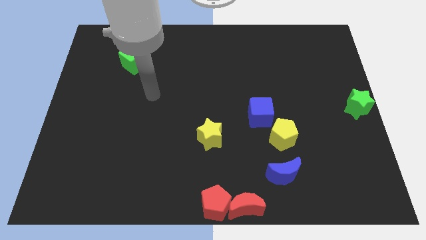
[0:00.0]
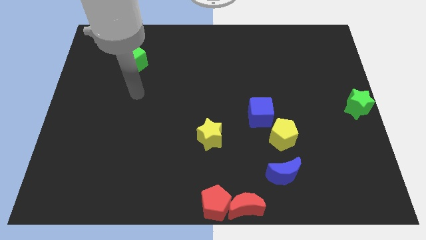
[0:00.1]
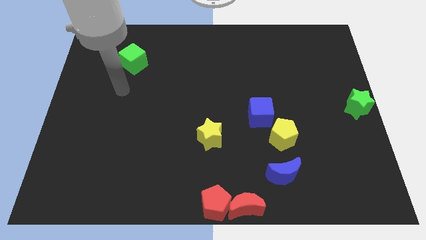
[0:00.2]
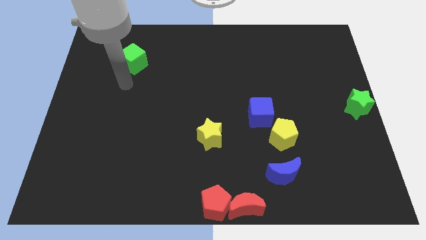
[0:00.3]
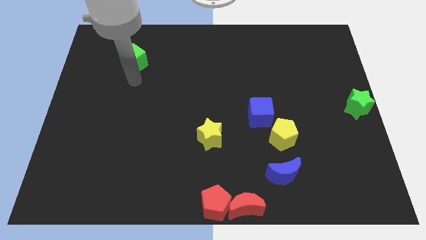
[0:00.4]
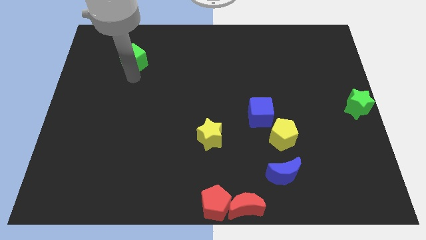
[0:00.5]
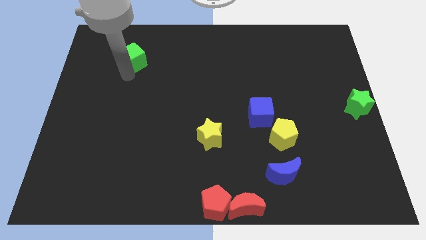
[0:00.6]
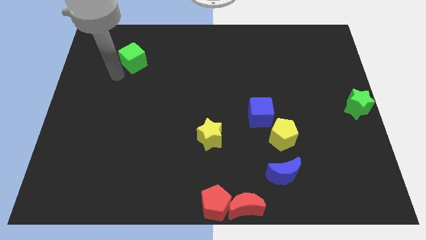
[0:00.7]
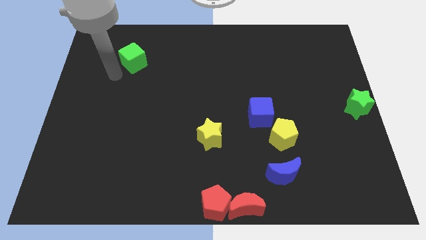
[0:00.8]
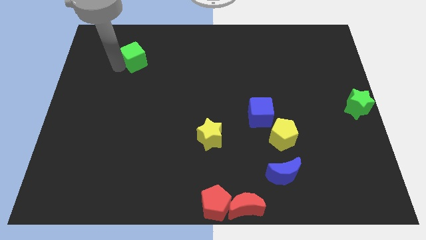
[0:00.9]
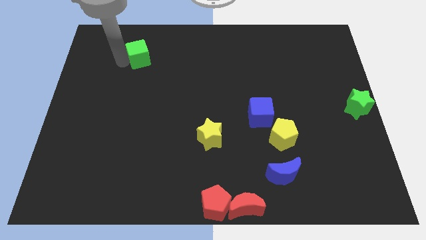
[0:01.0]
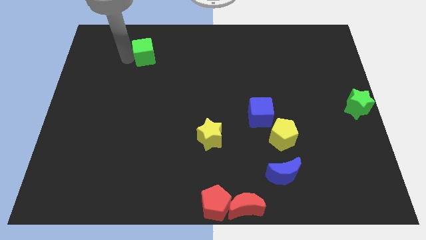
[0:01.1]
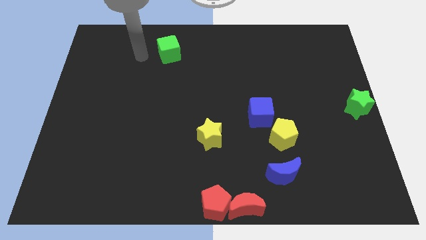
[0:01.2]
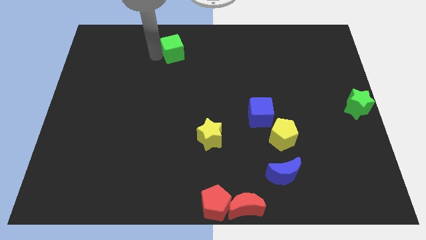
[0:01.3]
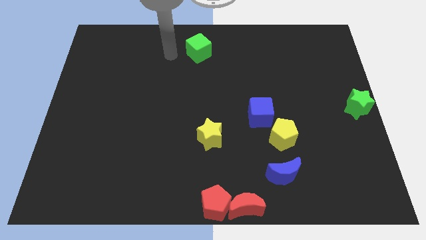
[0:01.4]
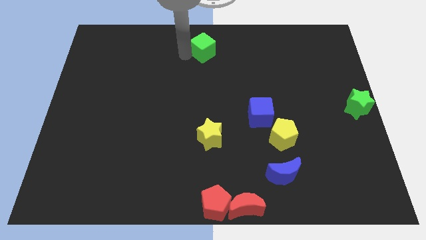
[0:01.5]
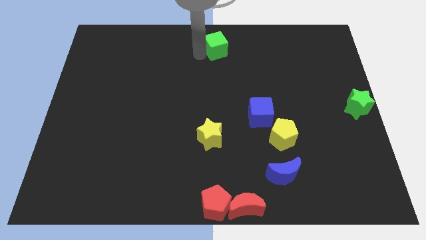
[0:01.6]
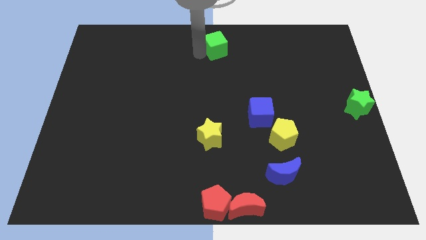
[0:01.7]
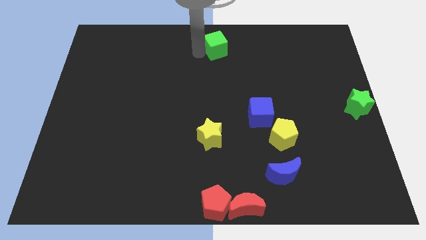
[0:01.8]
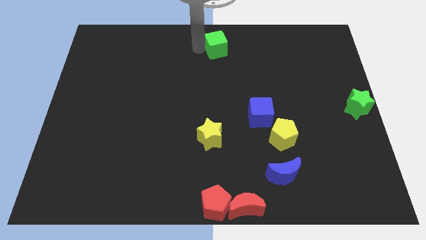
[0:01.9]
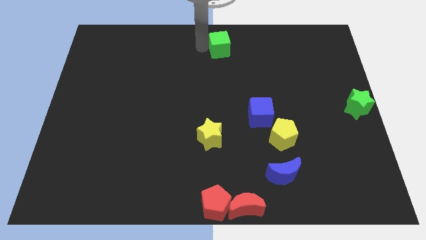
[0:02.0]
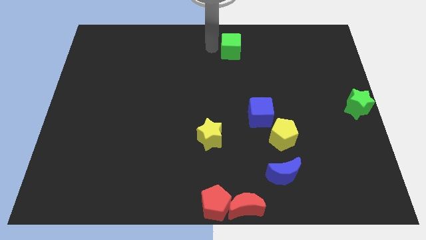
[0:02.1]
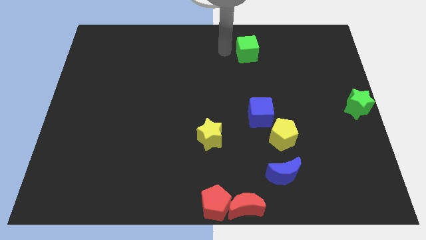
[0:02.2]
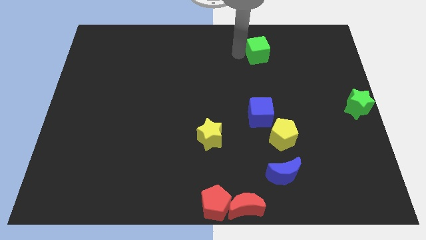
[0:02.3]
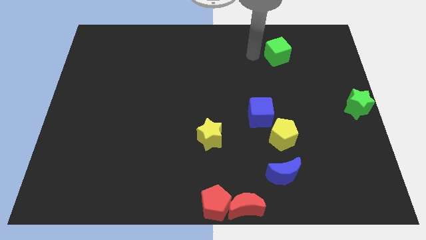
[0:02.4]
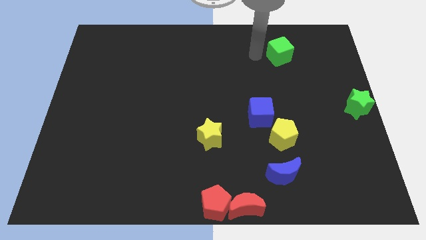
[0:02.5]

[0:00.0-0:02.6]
push the green cube towards the right side of the board

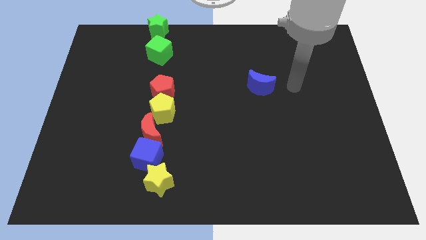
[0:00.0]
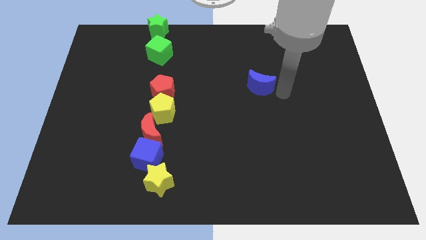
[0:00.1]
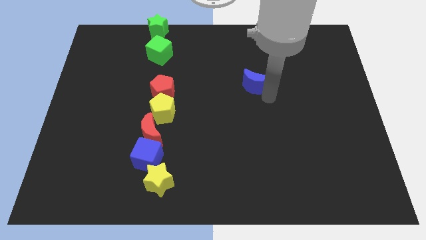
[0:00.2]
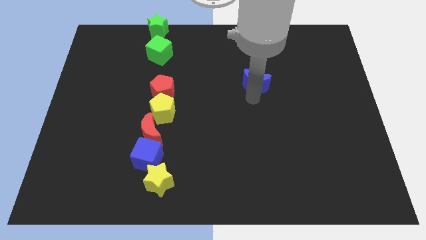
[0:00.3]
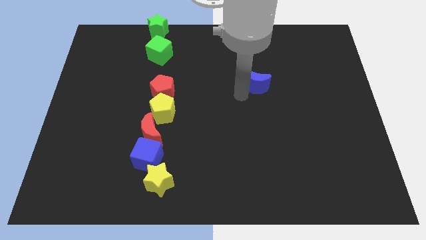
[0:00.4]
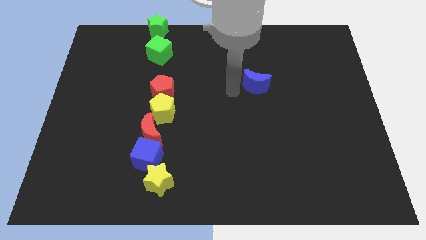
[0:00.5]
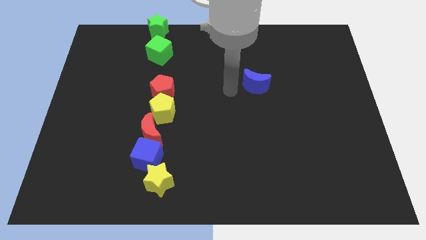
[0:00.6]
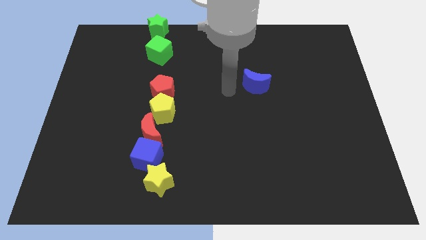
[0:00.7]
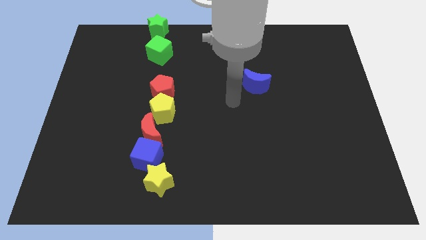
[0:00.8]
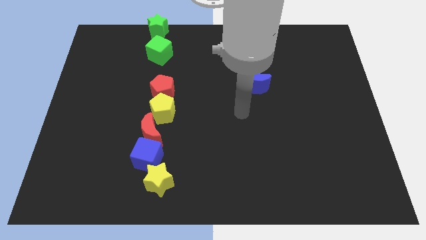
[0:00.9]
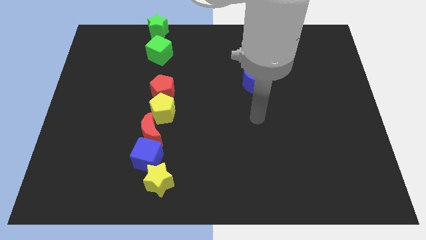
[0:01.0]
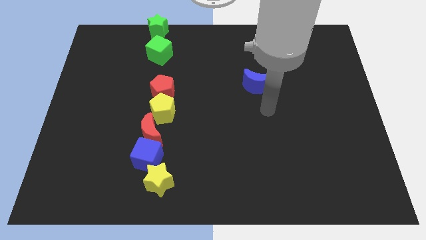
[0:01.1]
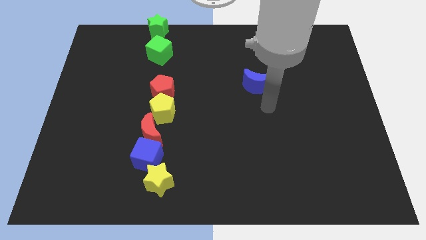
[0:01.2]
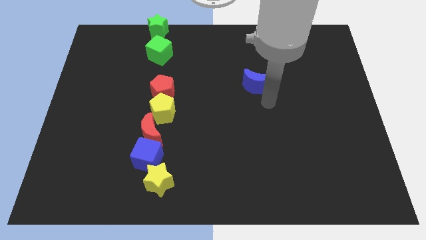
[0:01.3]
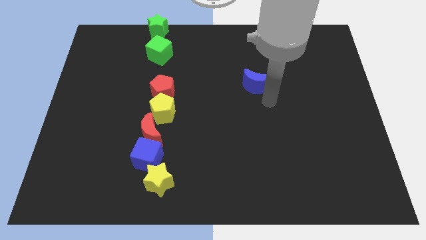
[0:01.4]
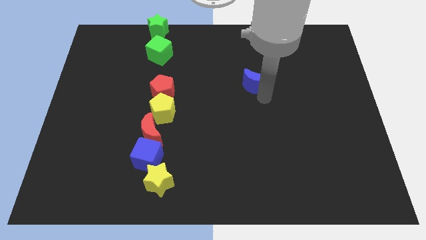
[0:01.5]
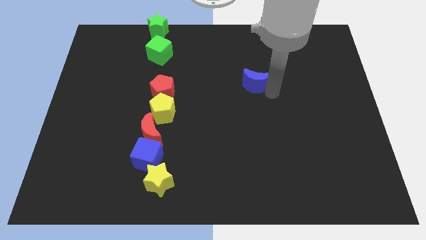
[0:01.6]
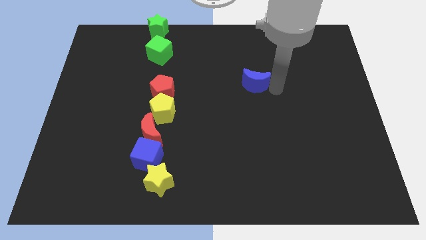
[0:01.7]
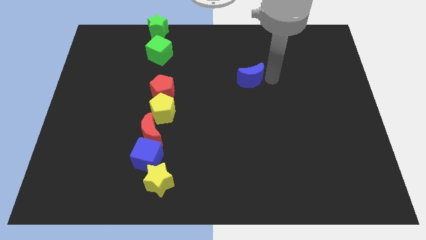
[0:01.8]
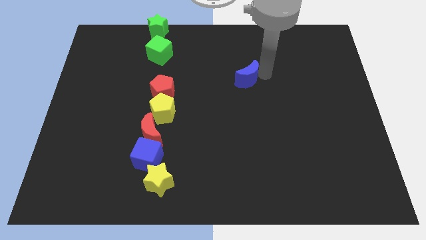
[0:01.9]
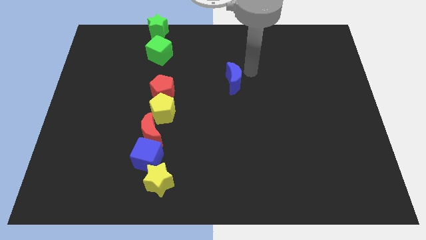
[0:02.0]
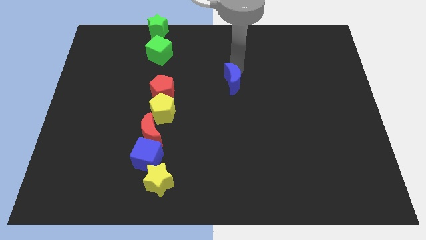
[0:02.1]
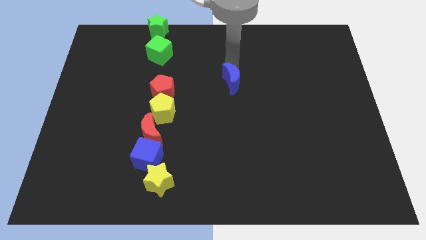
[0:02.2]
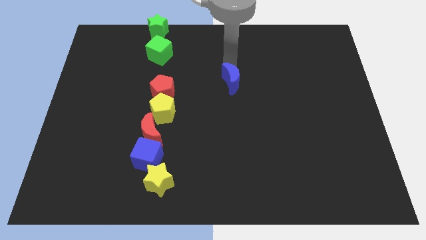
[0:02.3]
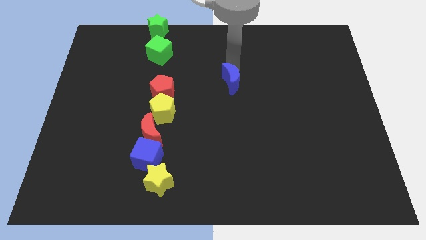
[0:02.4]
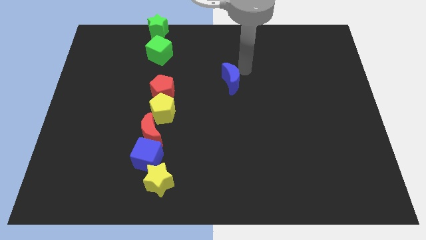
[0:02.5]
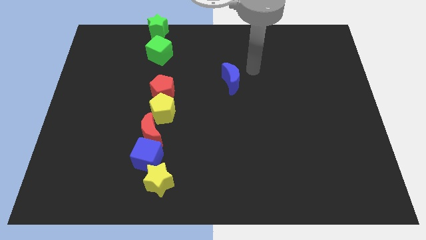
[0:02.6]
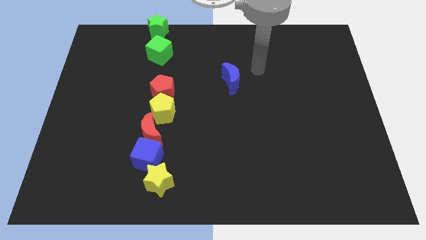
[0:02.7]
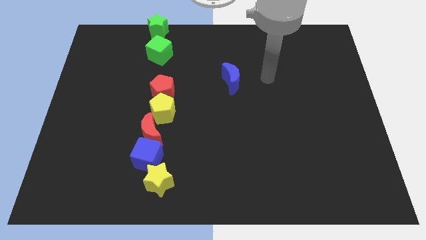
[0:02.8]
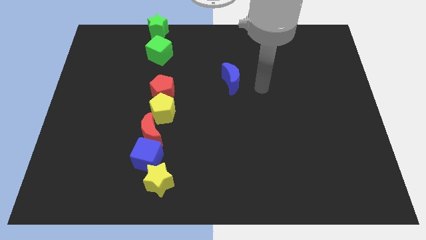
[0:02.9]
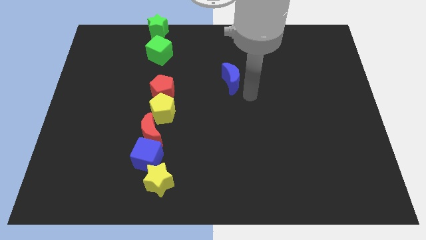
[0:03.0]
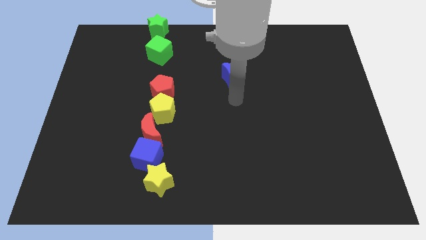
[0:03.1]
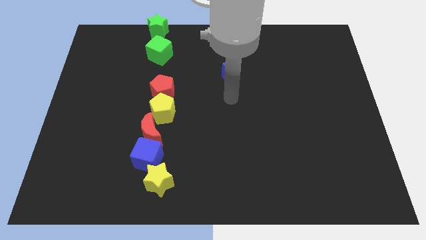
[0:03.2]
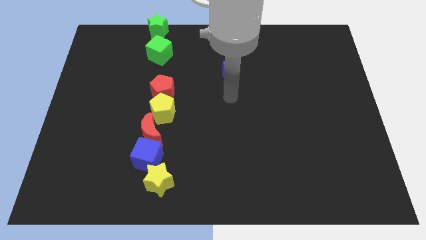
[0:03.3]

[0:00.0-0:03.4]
place your arm below blue moon

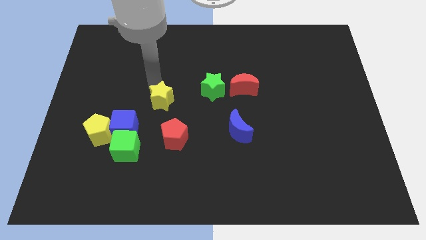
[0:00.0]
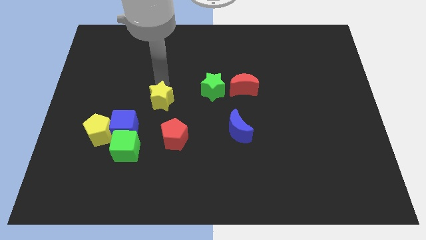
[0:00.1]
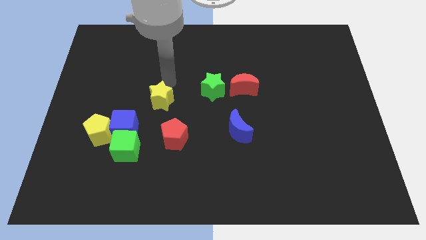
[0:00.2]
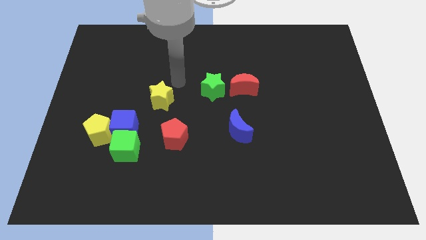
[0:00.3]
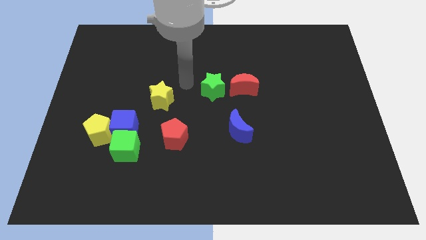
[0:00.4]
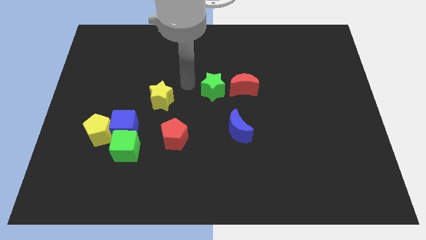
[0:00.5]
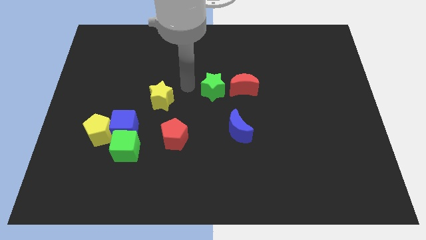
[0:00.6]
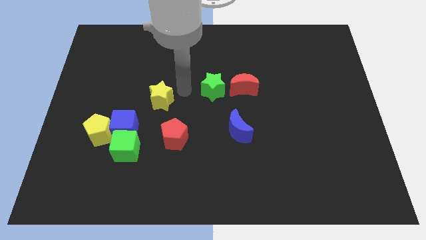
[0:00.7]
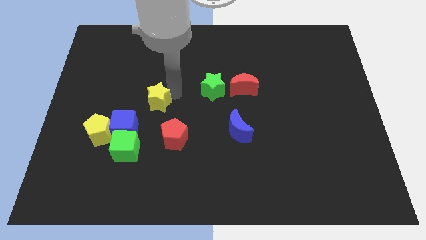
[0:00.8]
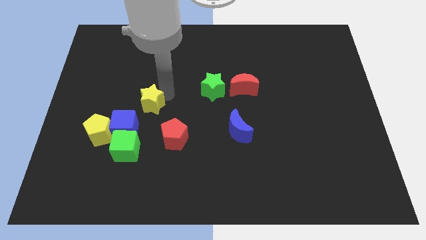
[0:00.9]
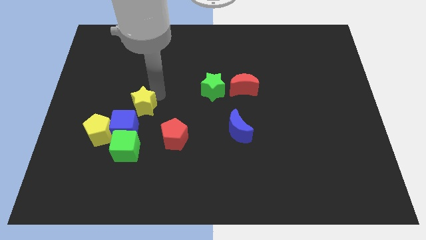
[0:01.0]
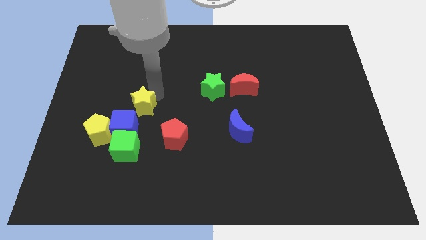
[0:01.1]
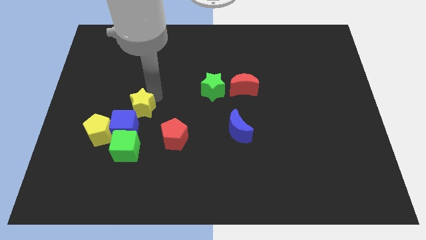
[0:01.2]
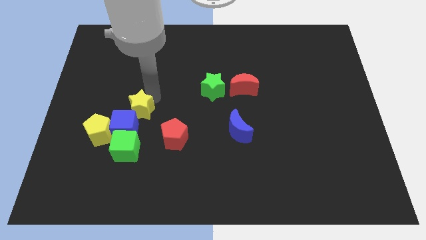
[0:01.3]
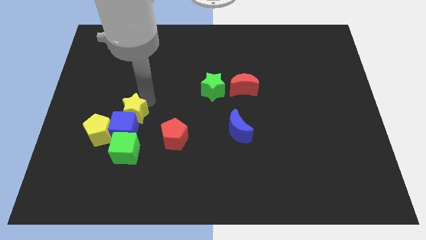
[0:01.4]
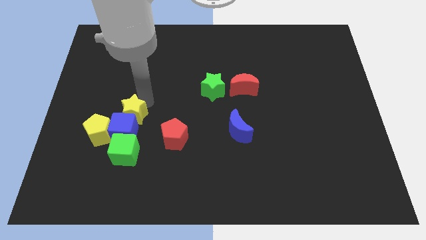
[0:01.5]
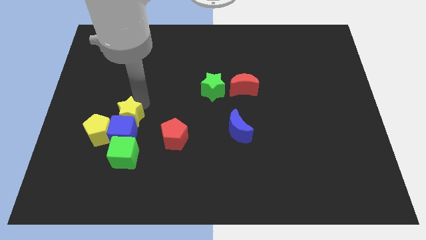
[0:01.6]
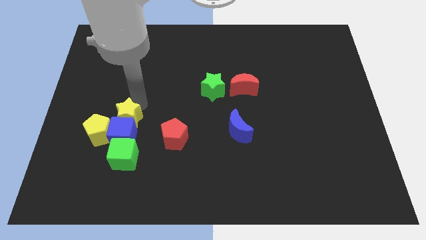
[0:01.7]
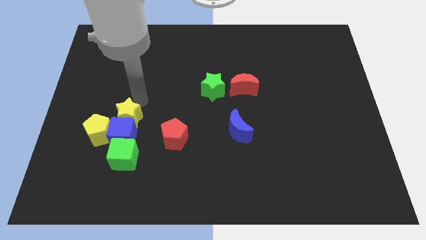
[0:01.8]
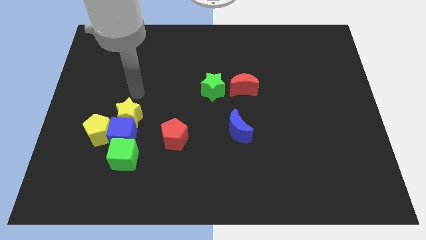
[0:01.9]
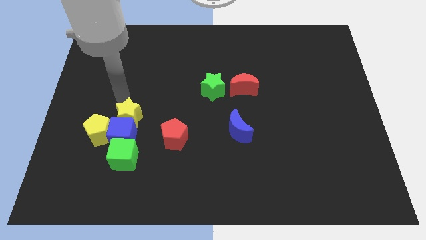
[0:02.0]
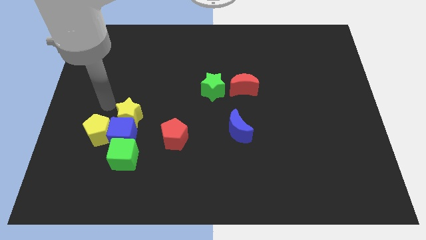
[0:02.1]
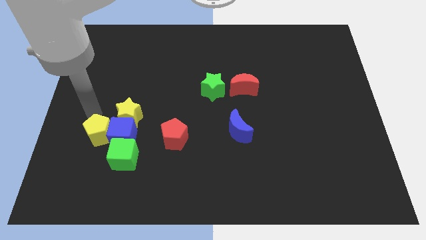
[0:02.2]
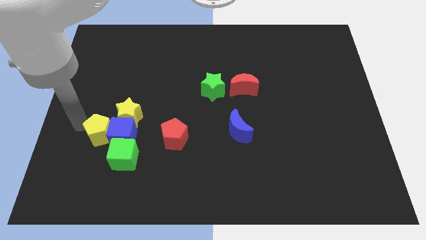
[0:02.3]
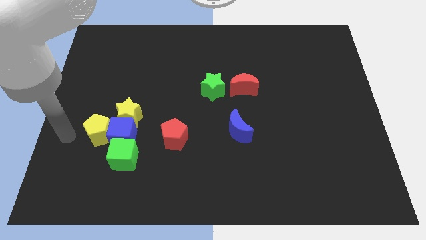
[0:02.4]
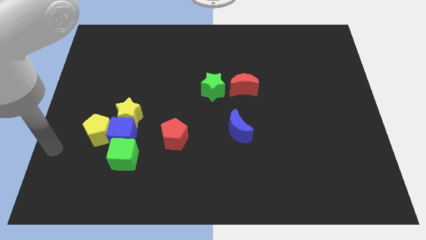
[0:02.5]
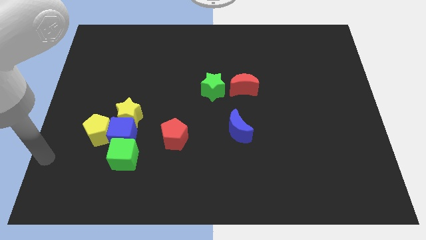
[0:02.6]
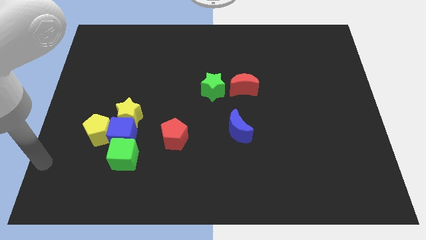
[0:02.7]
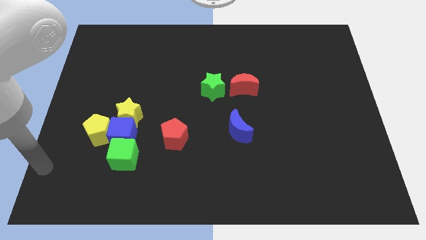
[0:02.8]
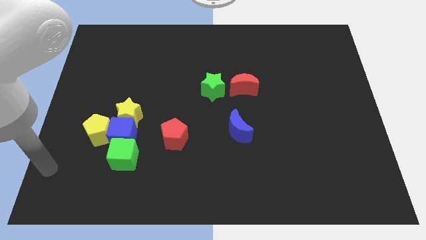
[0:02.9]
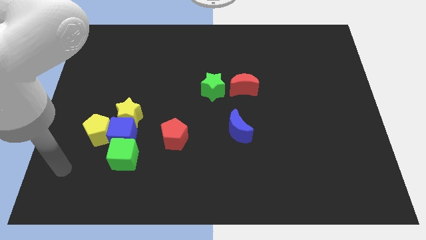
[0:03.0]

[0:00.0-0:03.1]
push the yellow star into the blue cube
